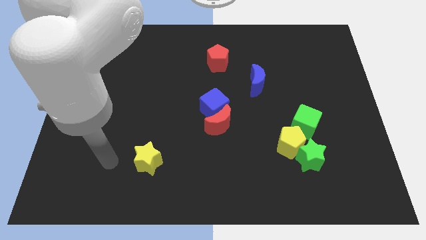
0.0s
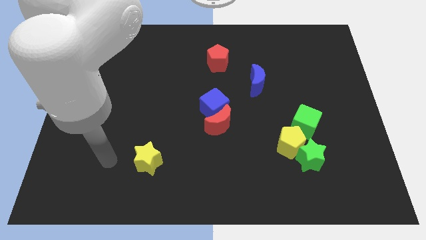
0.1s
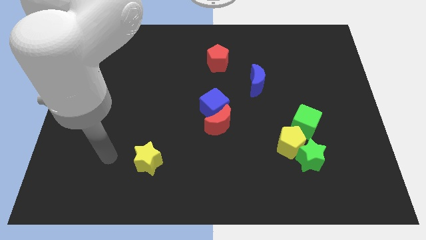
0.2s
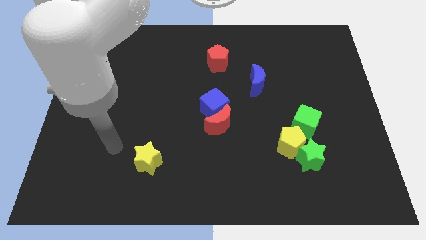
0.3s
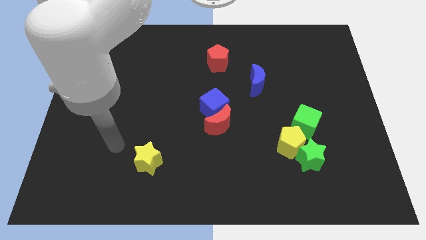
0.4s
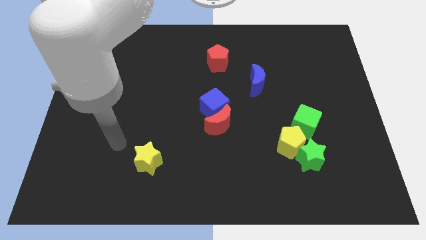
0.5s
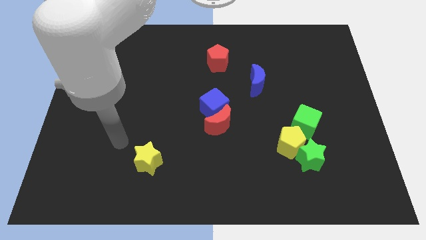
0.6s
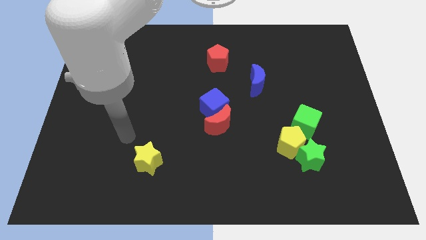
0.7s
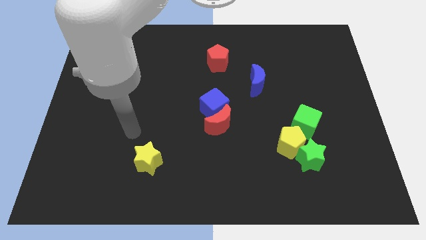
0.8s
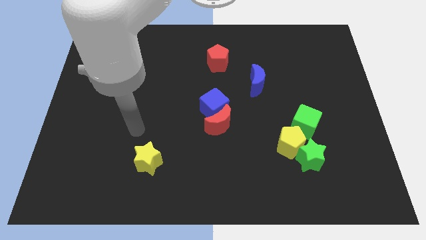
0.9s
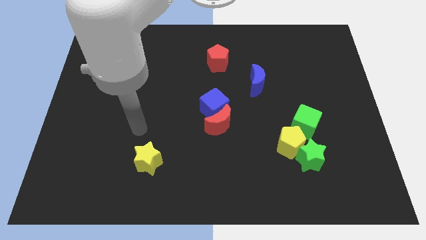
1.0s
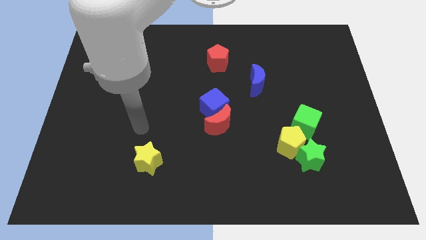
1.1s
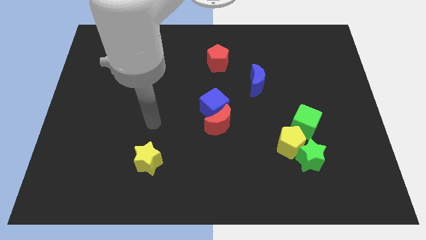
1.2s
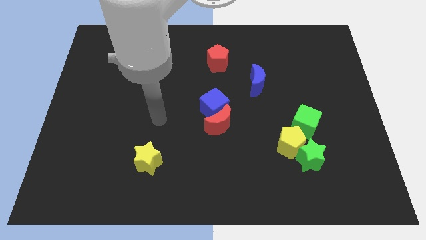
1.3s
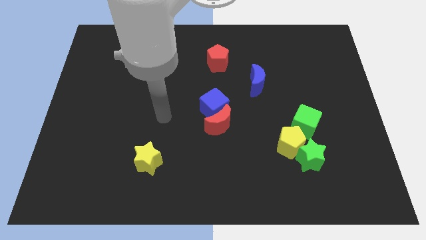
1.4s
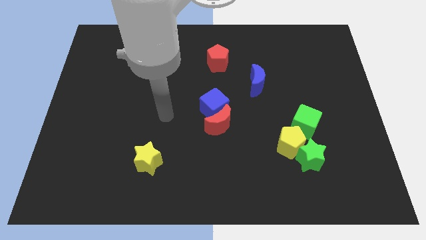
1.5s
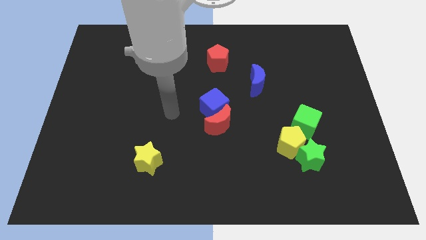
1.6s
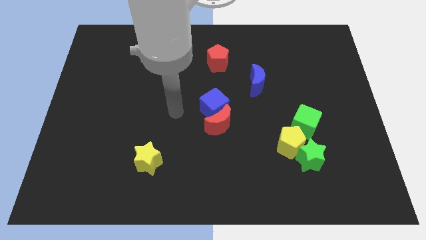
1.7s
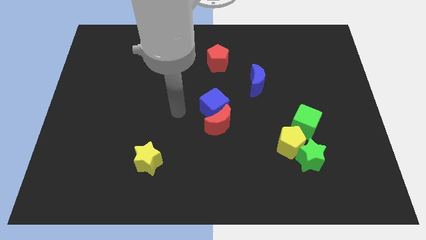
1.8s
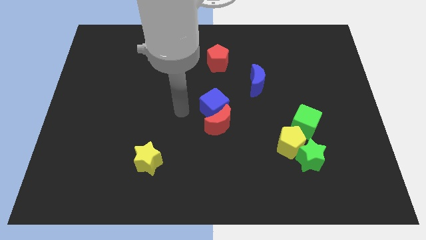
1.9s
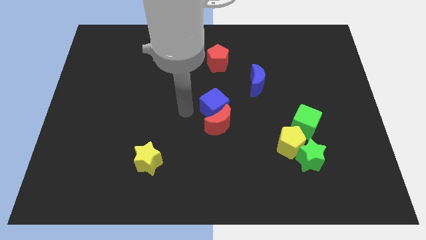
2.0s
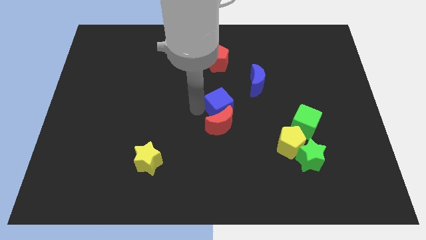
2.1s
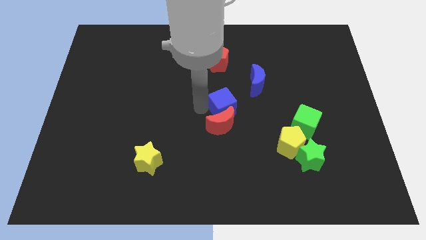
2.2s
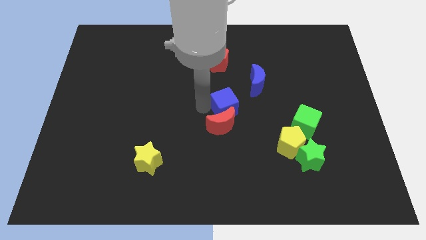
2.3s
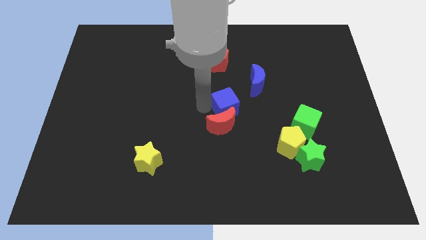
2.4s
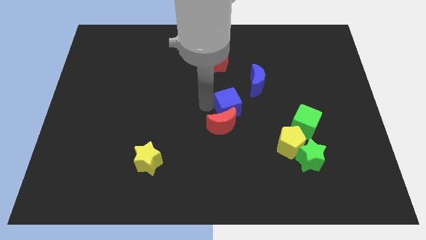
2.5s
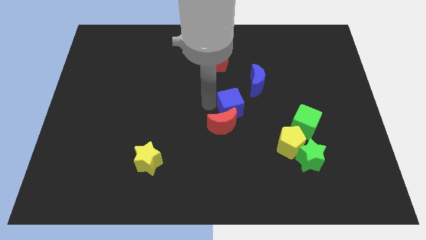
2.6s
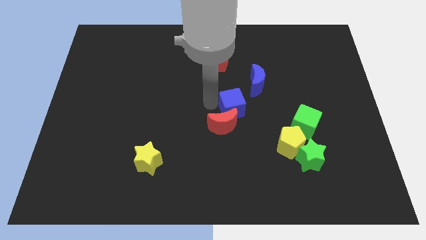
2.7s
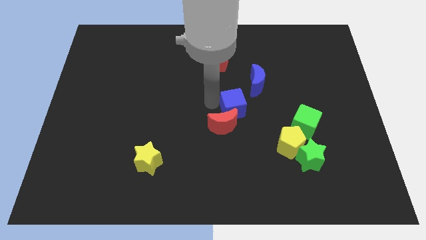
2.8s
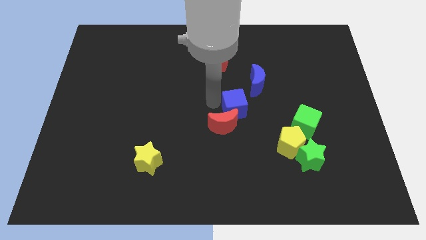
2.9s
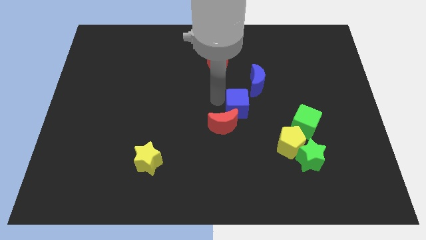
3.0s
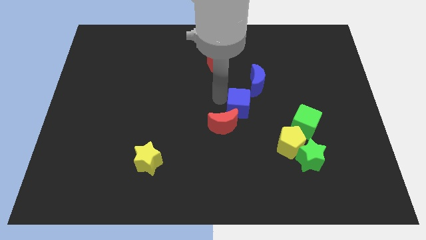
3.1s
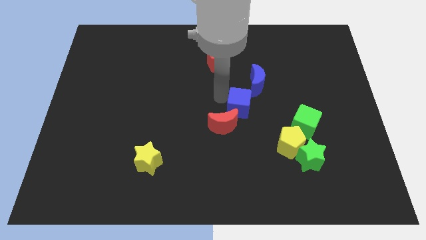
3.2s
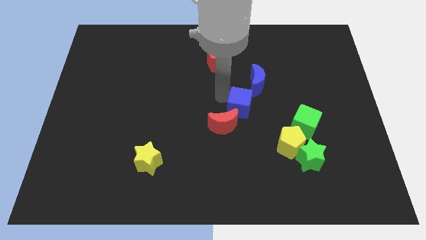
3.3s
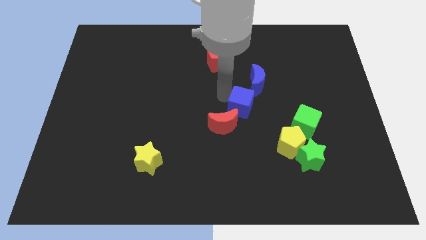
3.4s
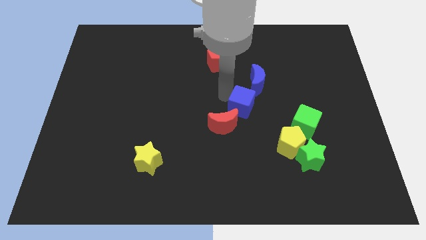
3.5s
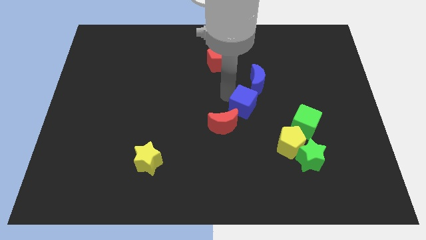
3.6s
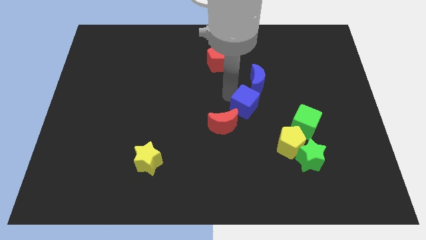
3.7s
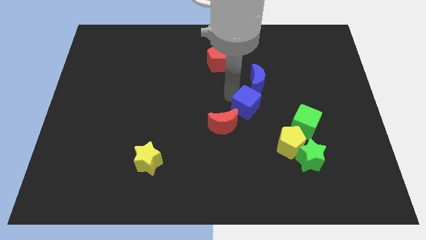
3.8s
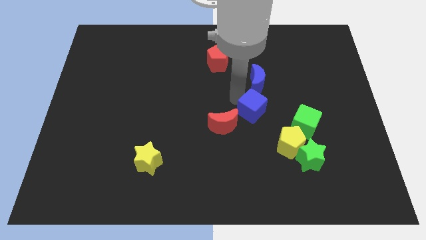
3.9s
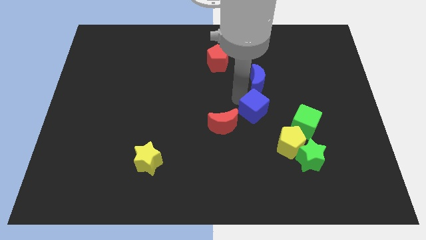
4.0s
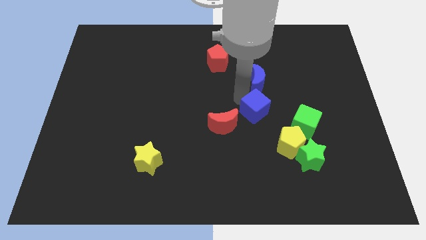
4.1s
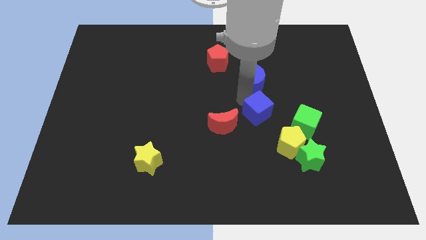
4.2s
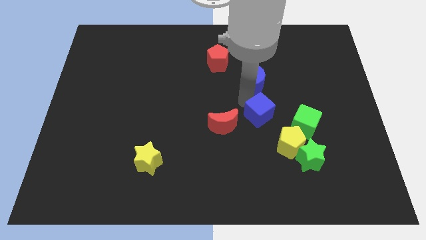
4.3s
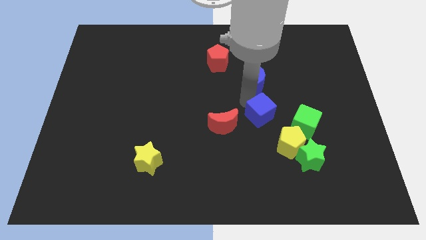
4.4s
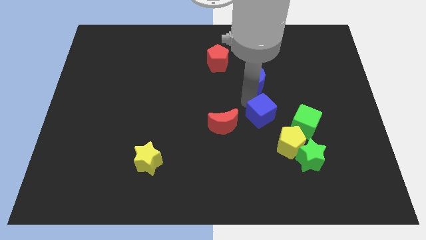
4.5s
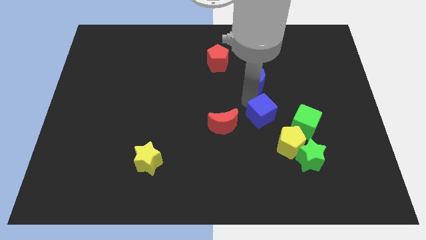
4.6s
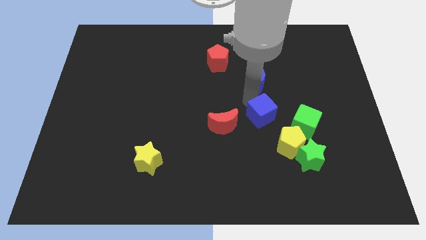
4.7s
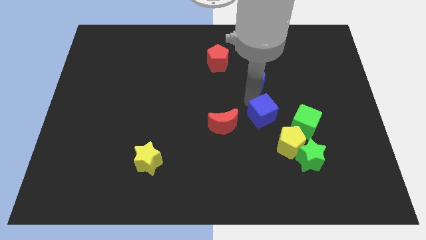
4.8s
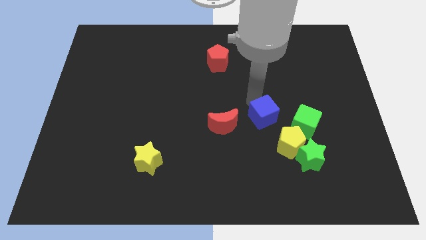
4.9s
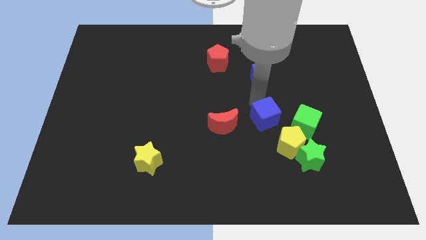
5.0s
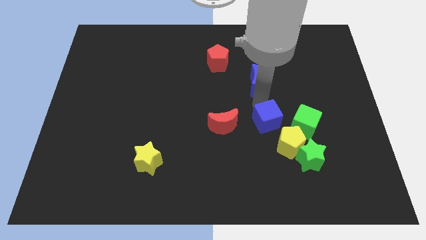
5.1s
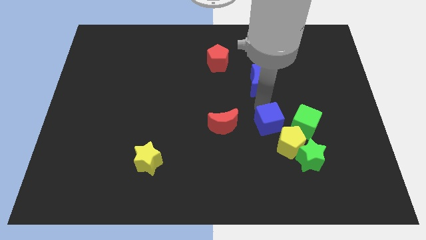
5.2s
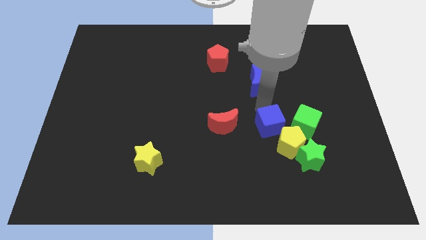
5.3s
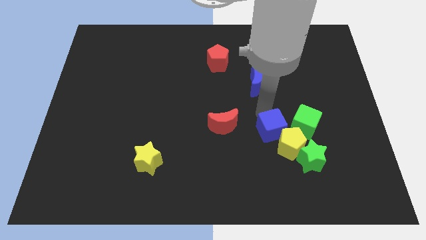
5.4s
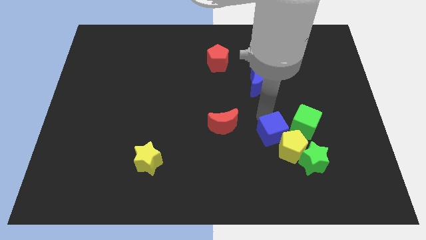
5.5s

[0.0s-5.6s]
slide the blue cube next to the yellow pentagon

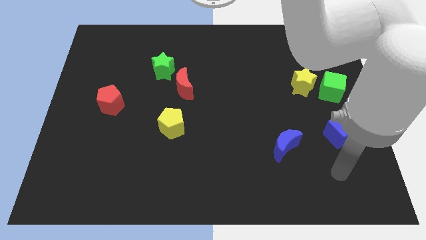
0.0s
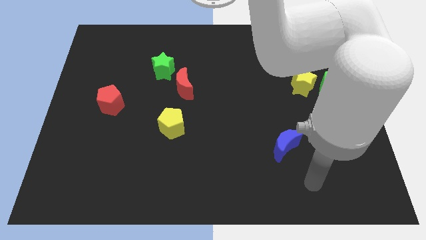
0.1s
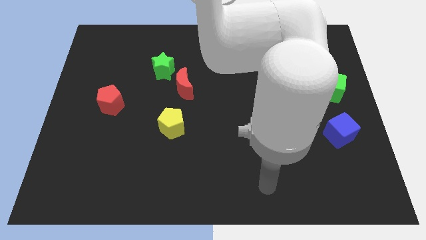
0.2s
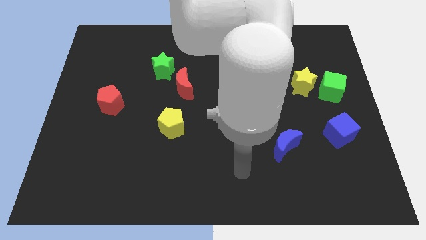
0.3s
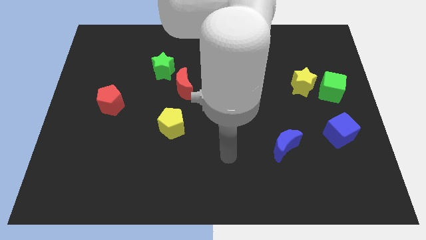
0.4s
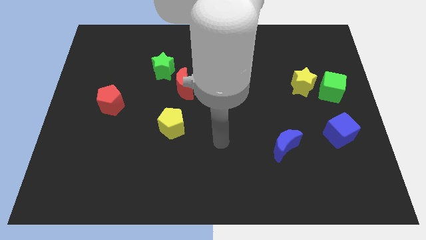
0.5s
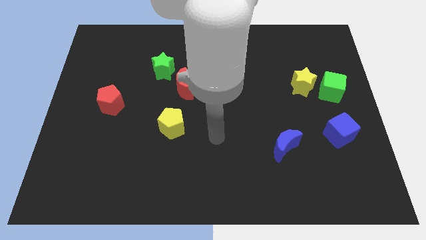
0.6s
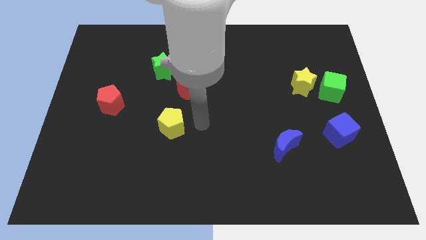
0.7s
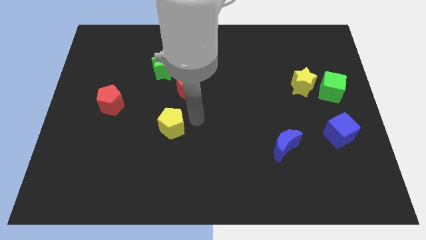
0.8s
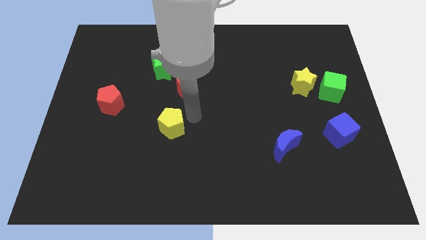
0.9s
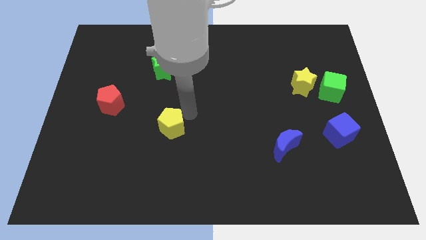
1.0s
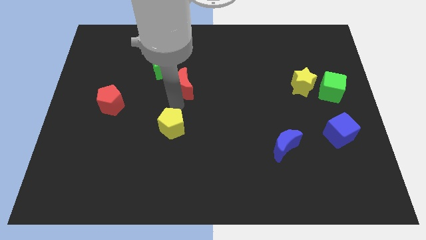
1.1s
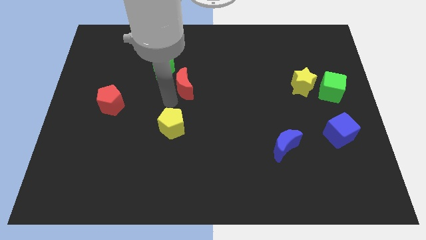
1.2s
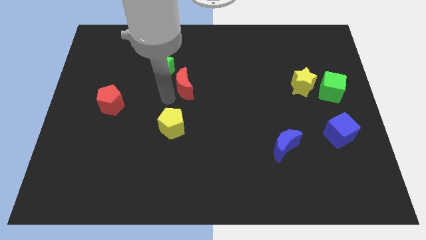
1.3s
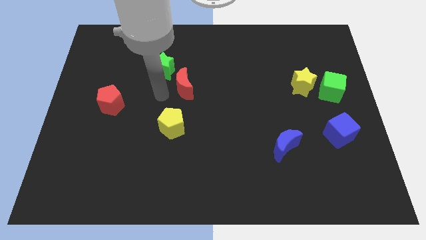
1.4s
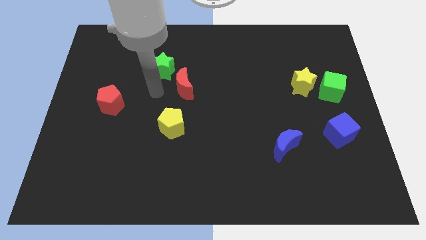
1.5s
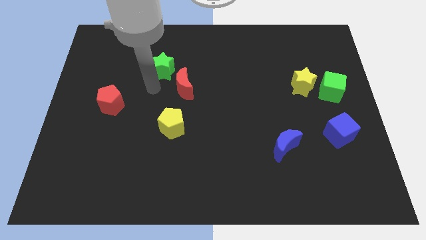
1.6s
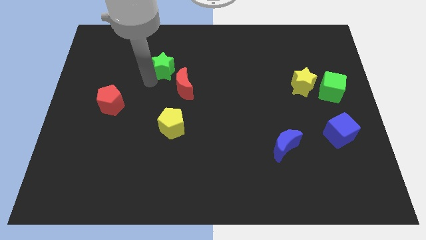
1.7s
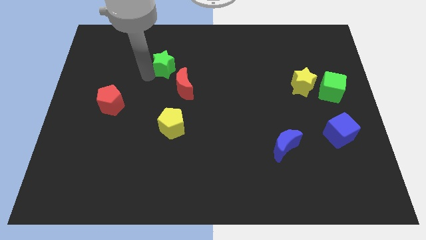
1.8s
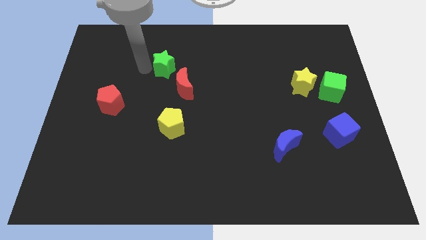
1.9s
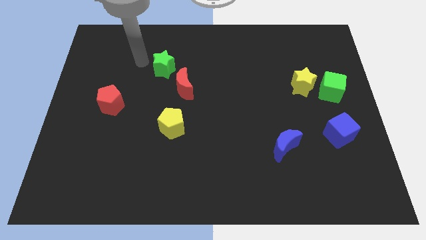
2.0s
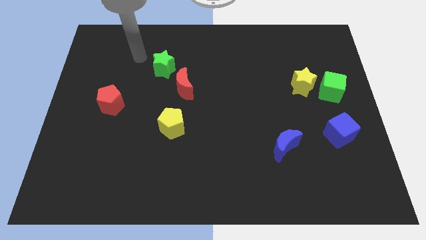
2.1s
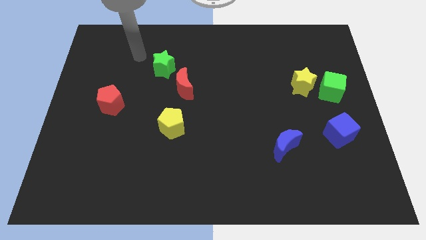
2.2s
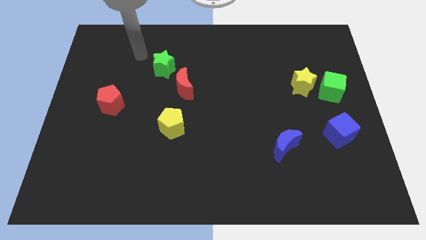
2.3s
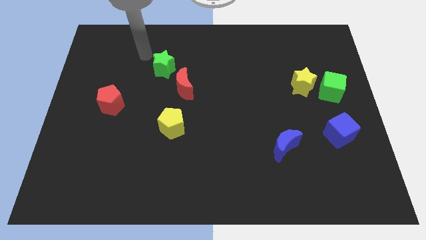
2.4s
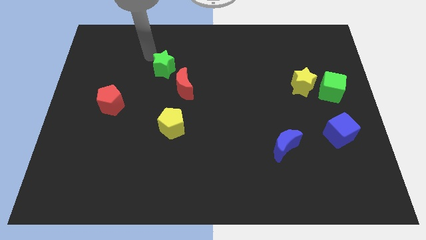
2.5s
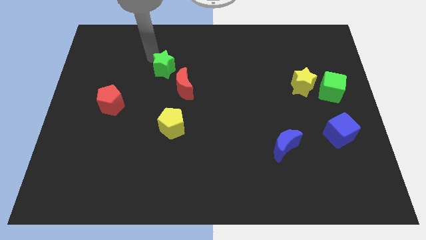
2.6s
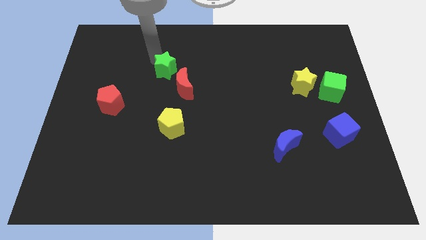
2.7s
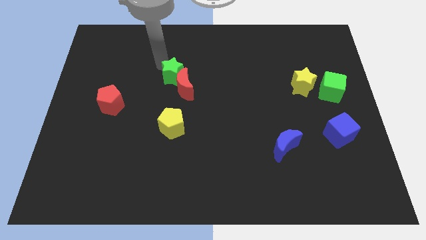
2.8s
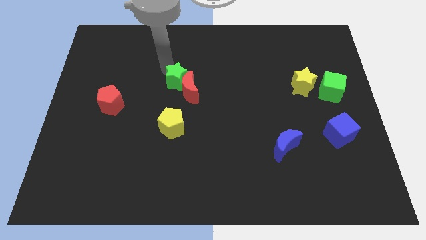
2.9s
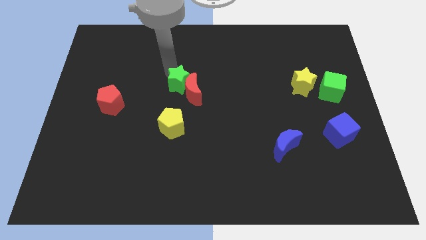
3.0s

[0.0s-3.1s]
slide the green star towards the red moon
